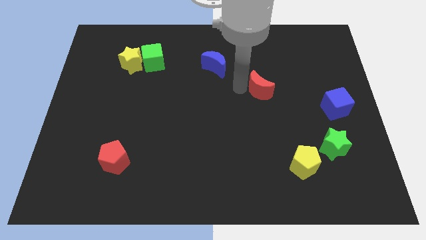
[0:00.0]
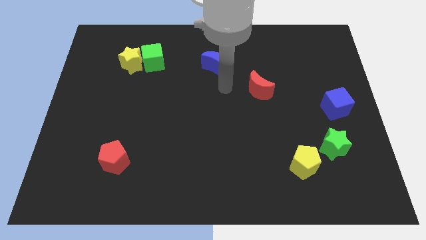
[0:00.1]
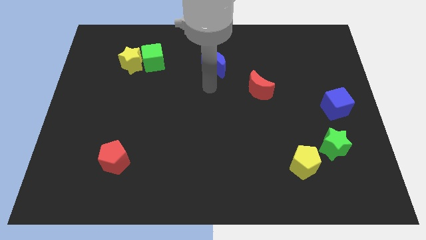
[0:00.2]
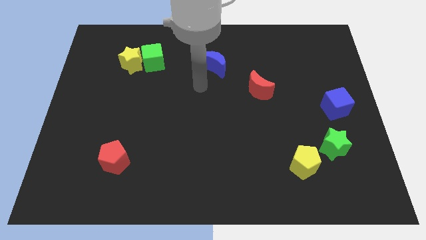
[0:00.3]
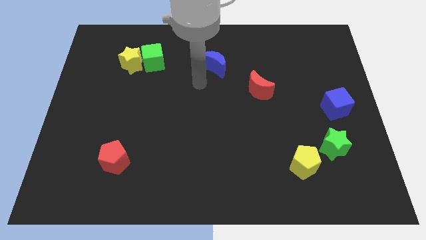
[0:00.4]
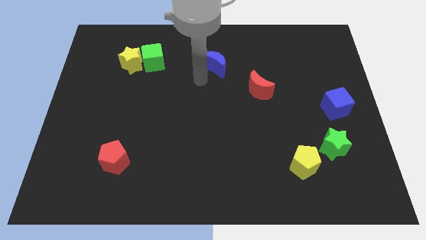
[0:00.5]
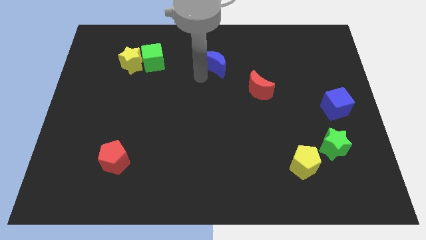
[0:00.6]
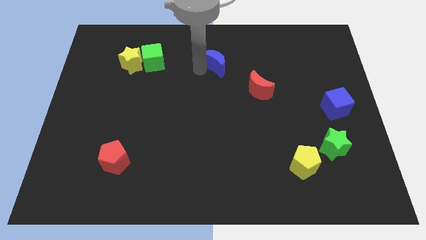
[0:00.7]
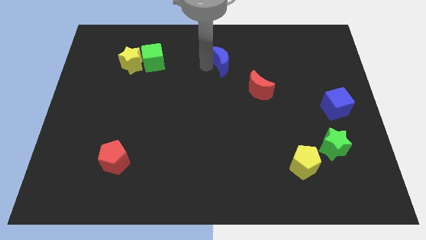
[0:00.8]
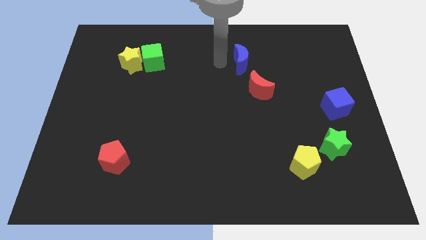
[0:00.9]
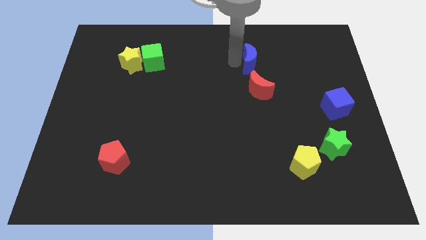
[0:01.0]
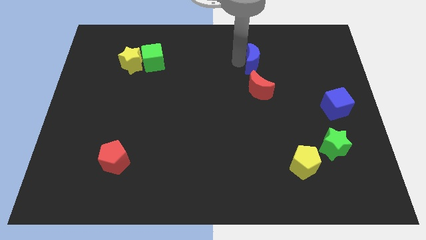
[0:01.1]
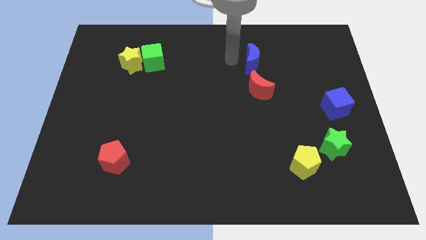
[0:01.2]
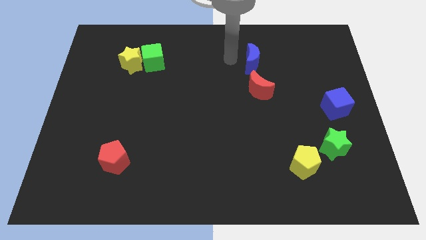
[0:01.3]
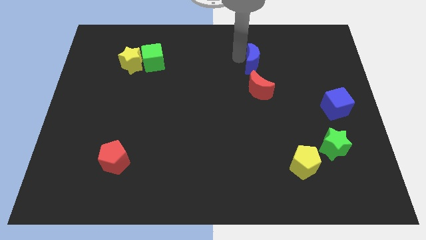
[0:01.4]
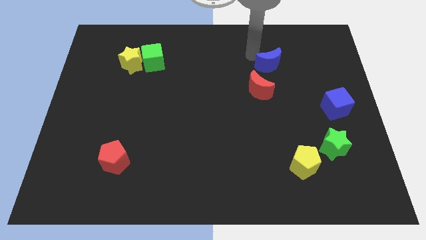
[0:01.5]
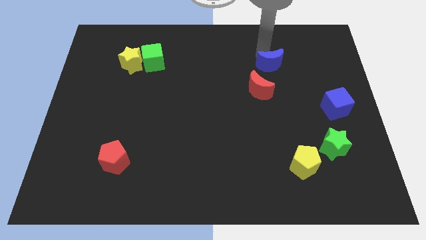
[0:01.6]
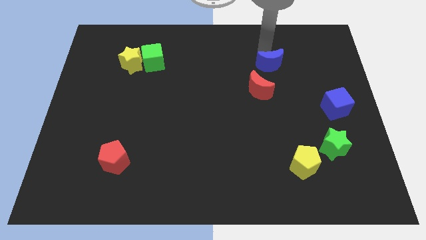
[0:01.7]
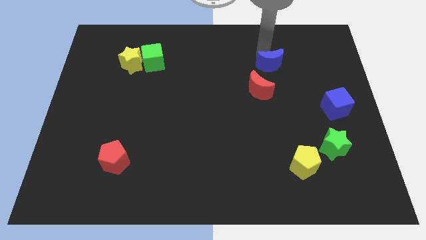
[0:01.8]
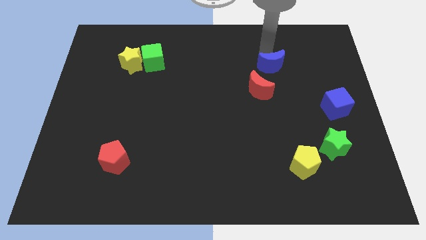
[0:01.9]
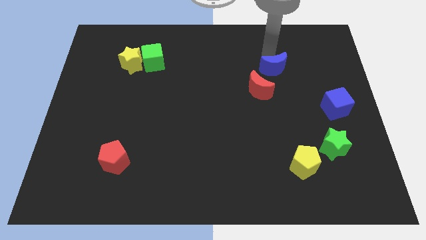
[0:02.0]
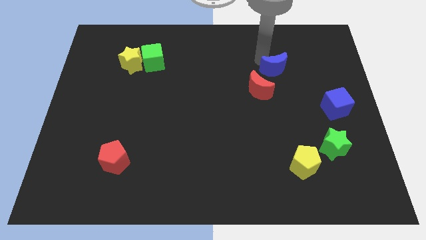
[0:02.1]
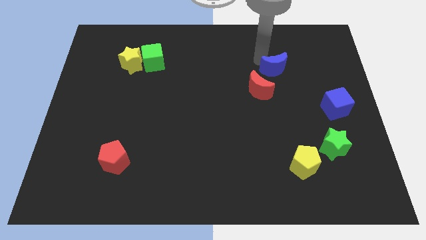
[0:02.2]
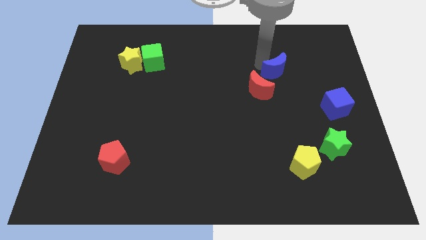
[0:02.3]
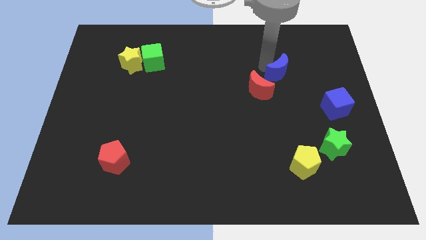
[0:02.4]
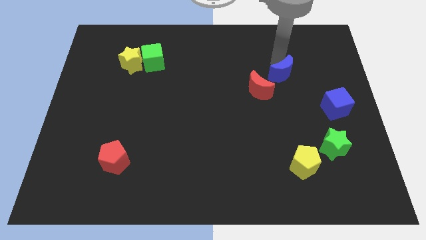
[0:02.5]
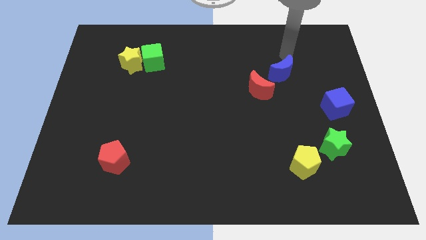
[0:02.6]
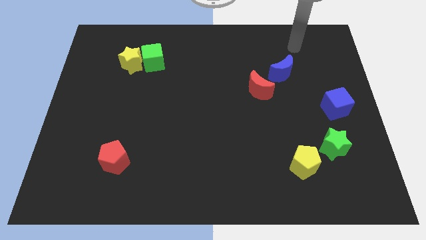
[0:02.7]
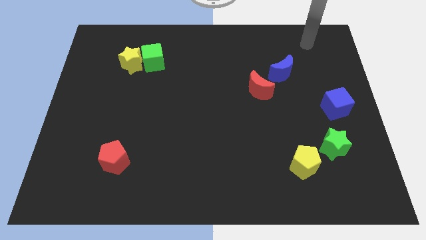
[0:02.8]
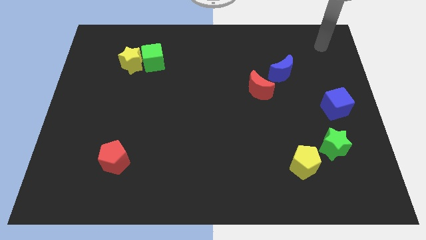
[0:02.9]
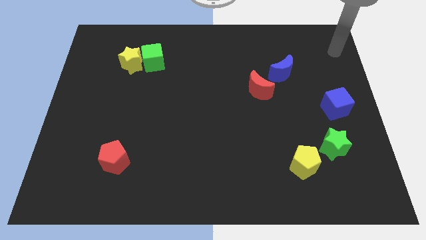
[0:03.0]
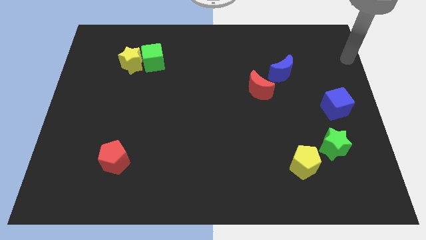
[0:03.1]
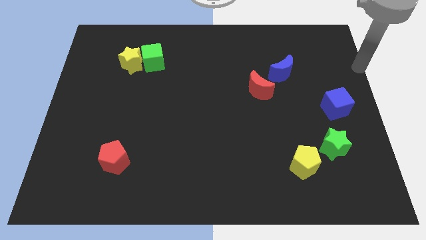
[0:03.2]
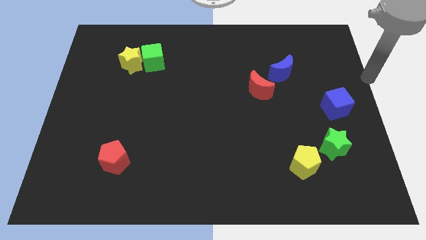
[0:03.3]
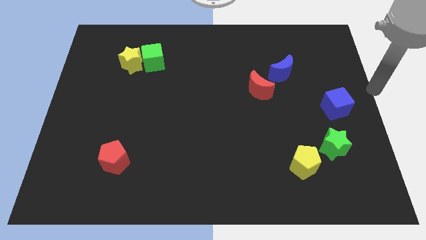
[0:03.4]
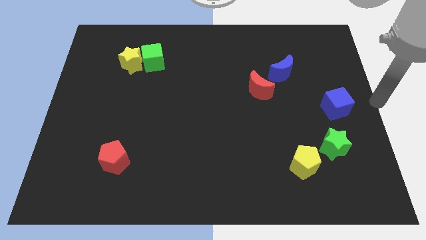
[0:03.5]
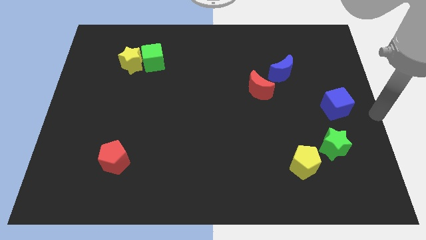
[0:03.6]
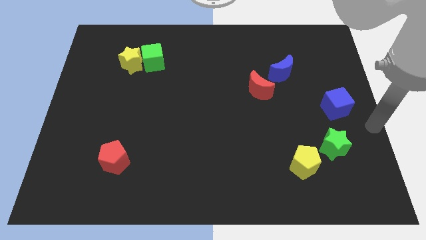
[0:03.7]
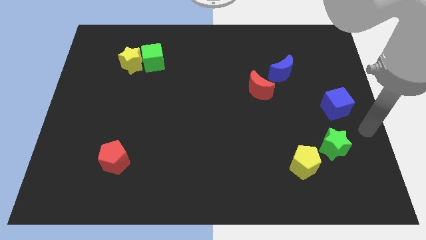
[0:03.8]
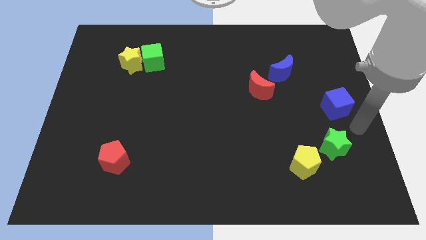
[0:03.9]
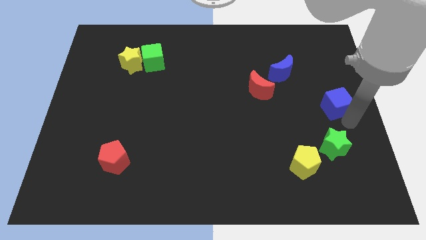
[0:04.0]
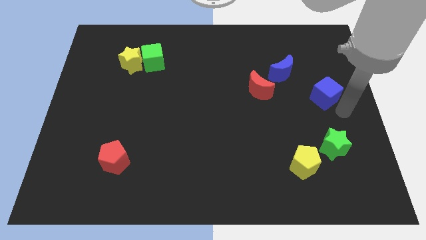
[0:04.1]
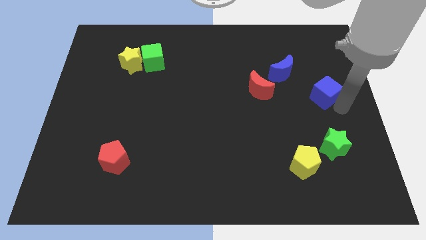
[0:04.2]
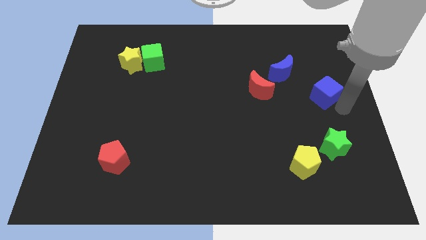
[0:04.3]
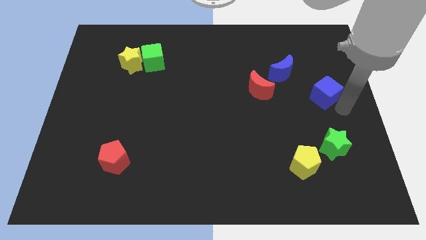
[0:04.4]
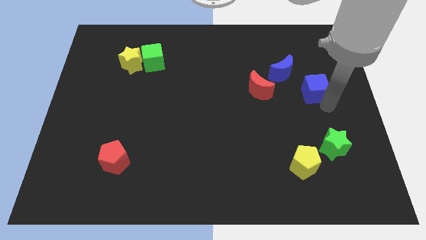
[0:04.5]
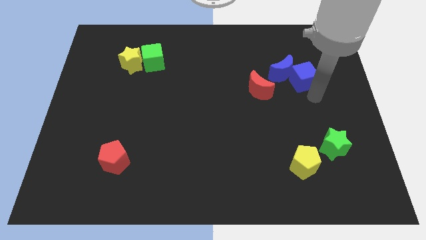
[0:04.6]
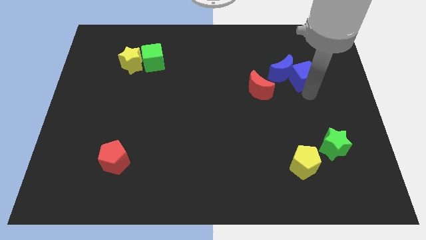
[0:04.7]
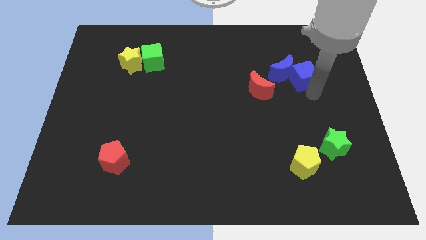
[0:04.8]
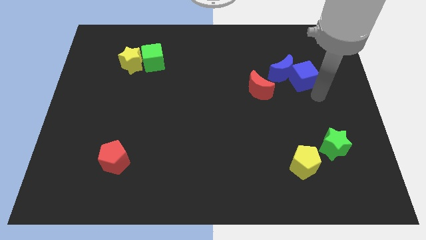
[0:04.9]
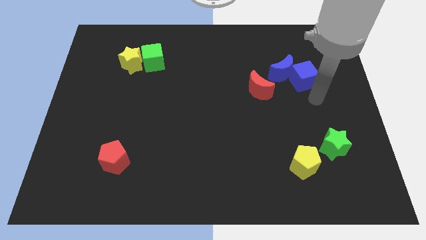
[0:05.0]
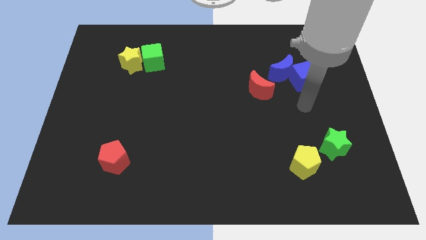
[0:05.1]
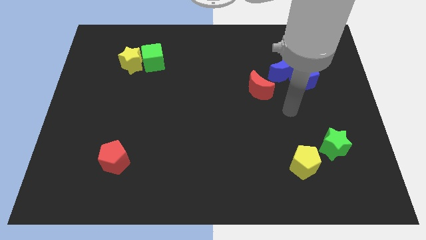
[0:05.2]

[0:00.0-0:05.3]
put the blue blocks to the right side of the red crescent

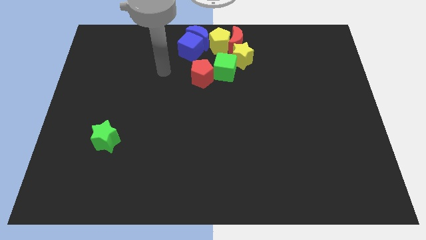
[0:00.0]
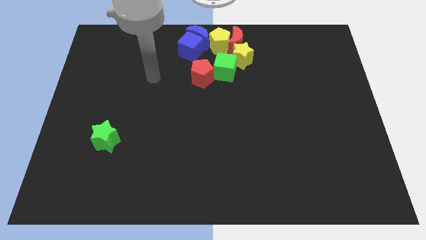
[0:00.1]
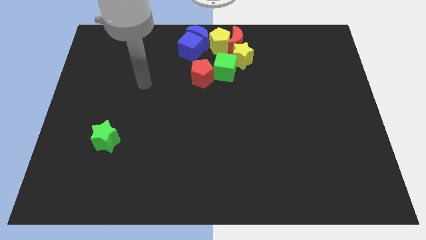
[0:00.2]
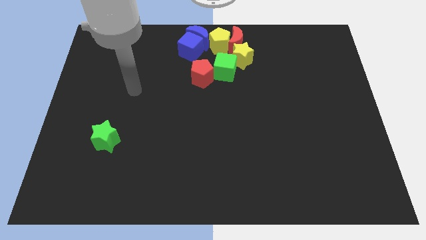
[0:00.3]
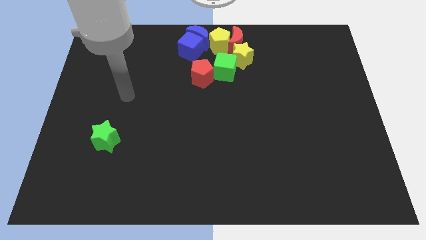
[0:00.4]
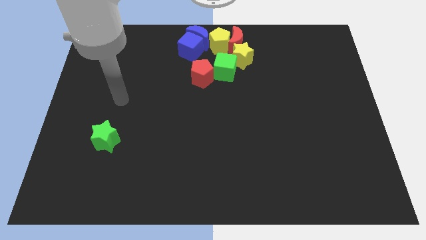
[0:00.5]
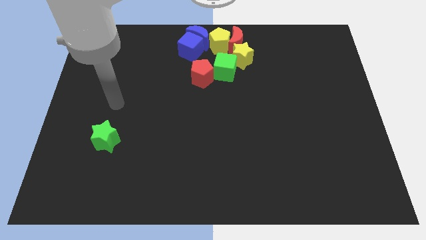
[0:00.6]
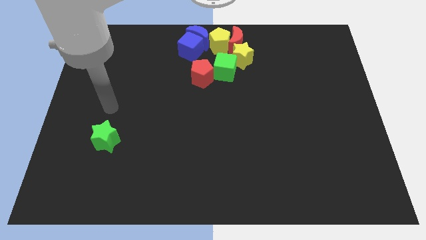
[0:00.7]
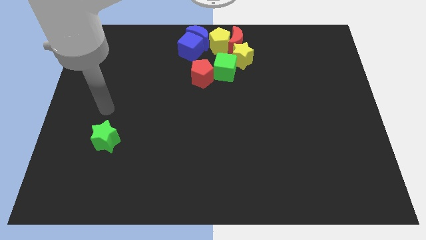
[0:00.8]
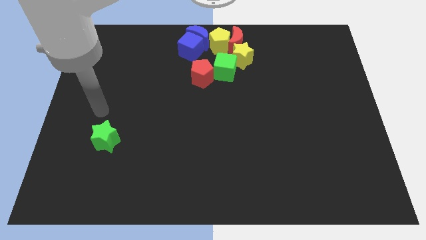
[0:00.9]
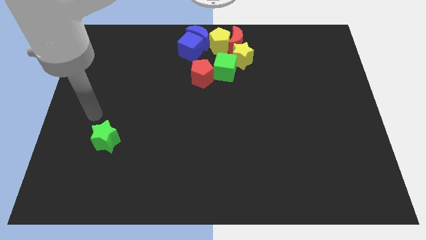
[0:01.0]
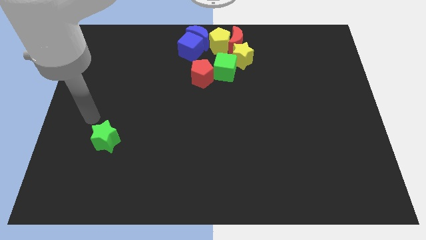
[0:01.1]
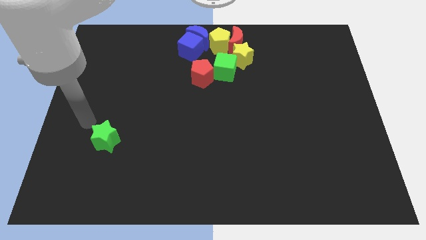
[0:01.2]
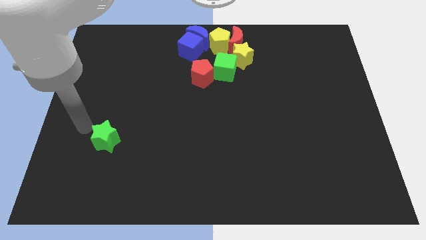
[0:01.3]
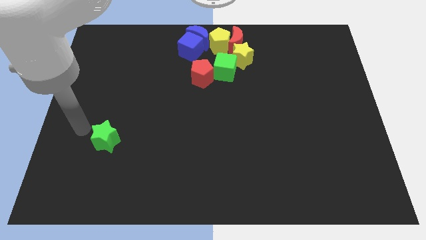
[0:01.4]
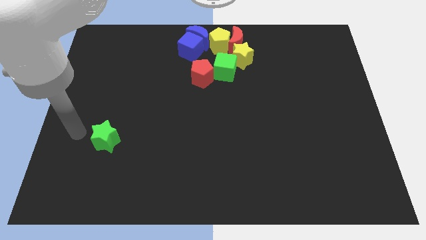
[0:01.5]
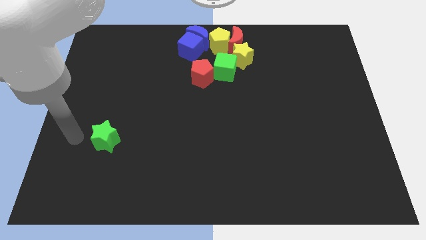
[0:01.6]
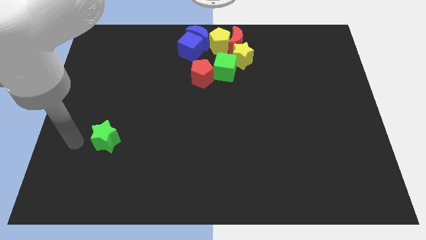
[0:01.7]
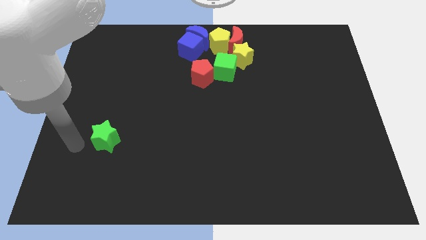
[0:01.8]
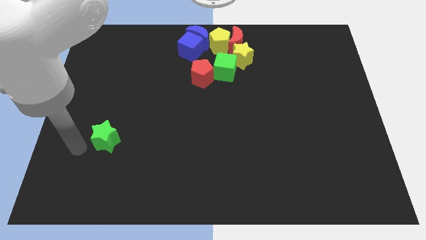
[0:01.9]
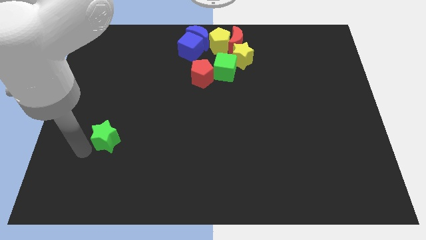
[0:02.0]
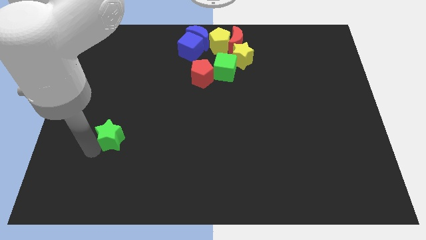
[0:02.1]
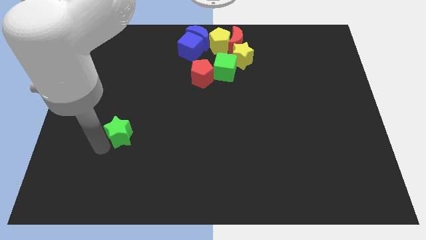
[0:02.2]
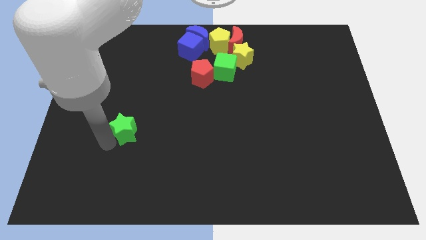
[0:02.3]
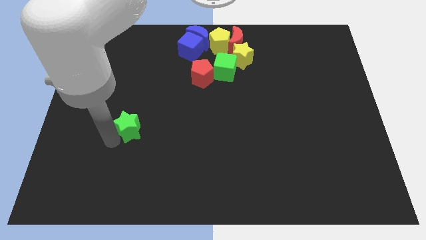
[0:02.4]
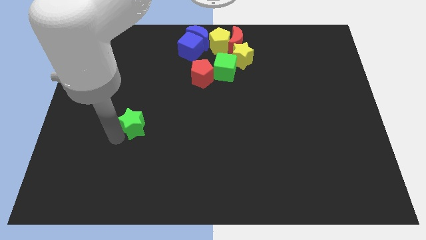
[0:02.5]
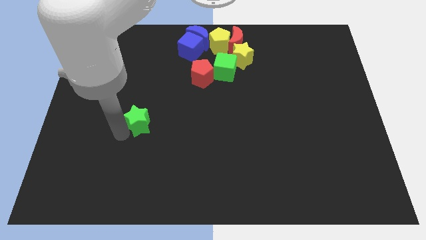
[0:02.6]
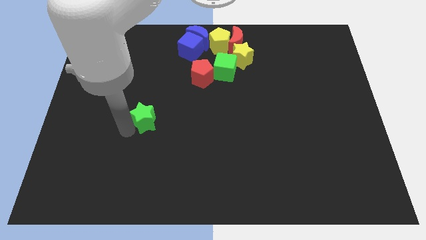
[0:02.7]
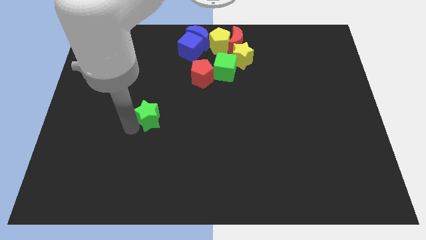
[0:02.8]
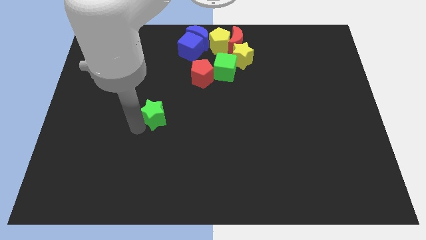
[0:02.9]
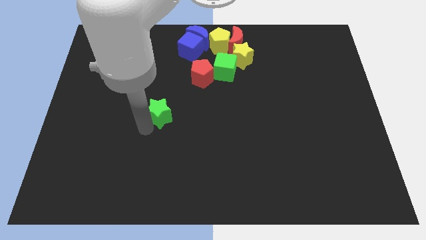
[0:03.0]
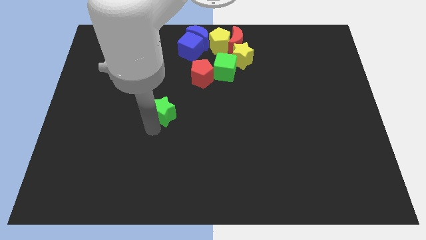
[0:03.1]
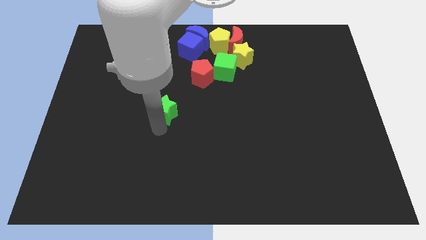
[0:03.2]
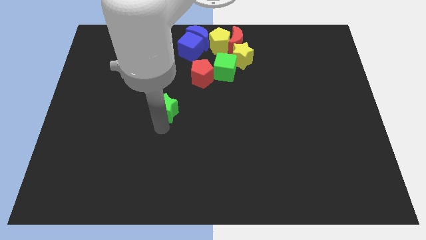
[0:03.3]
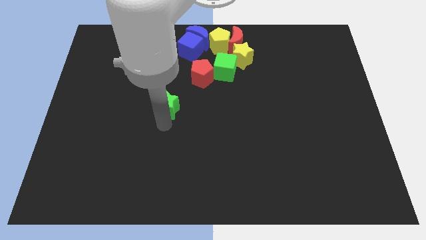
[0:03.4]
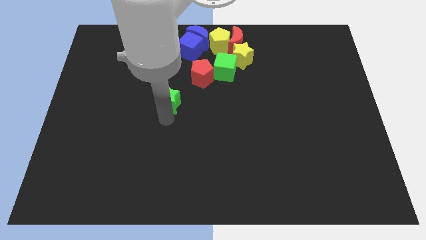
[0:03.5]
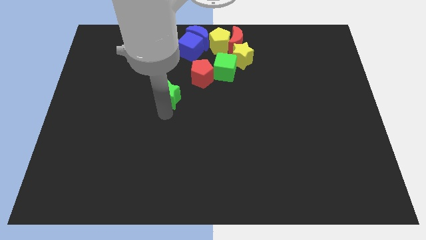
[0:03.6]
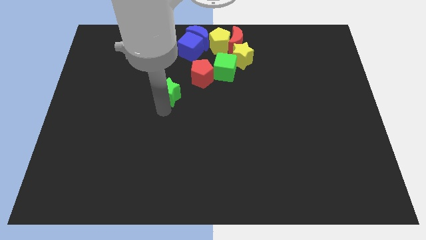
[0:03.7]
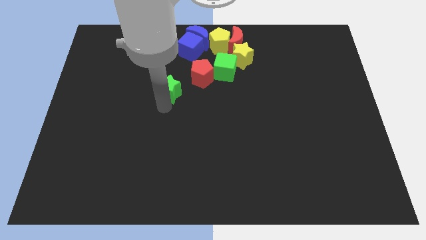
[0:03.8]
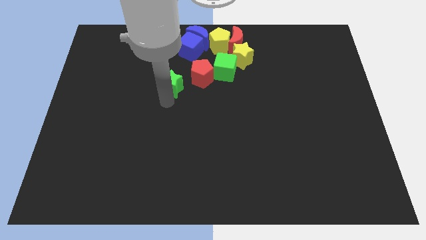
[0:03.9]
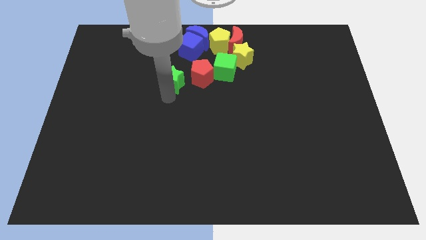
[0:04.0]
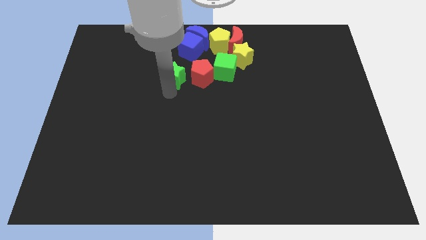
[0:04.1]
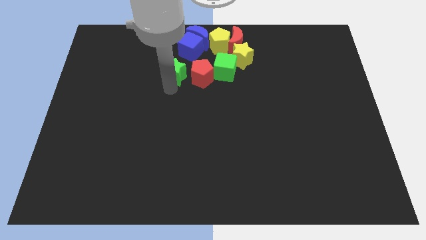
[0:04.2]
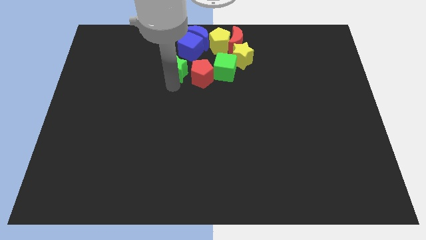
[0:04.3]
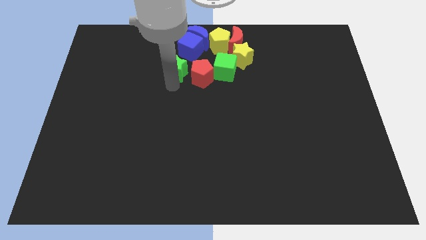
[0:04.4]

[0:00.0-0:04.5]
place the green star left to the red pentagon
